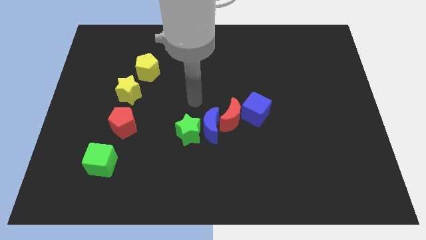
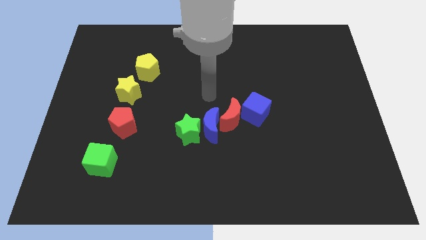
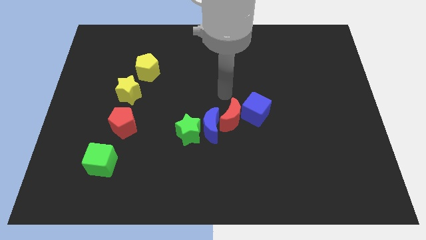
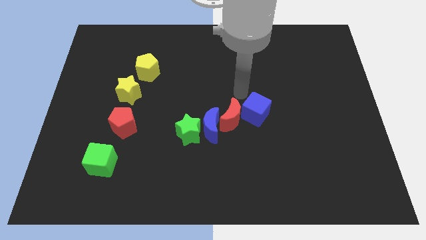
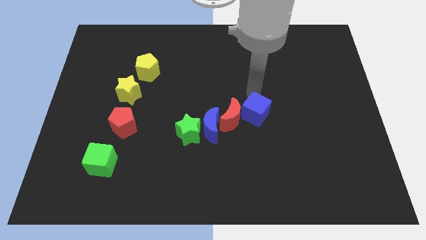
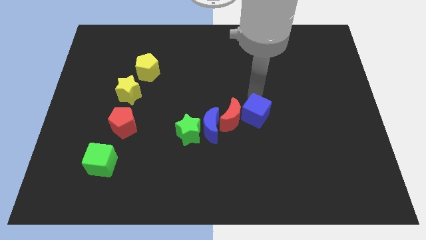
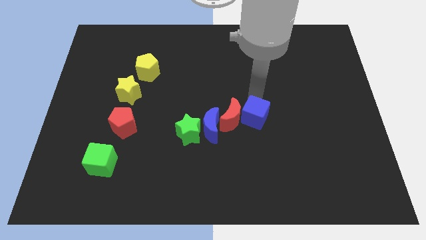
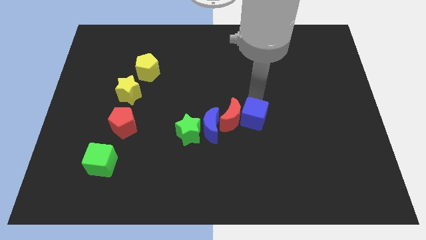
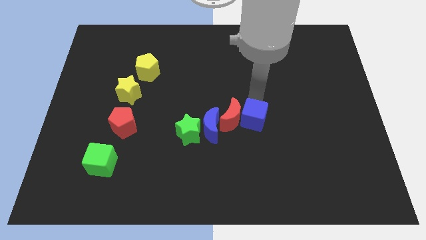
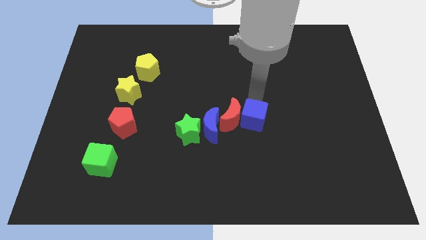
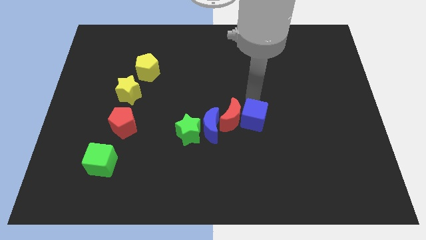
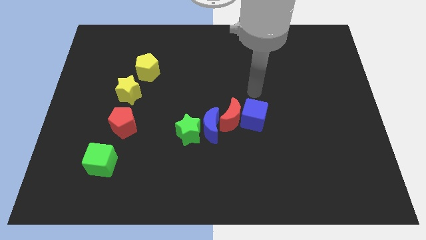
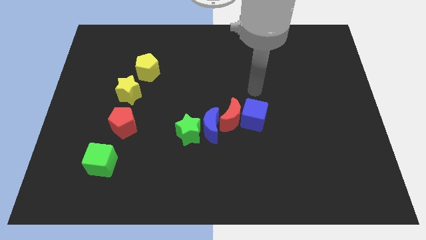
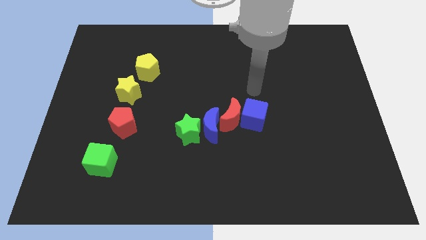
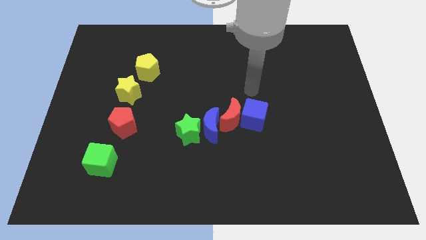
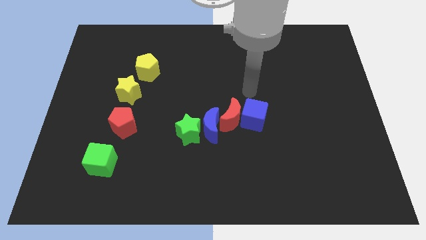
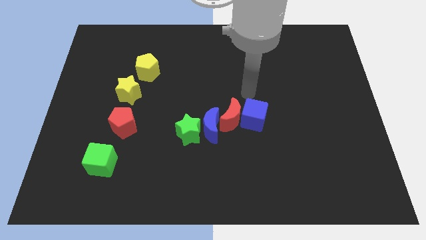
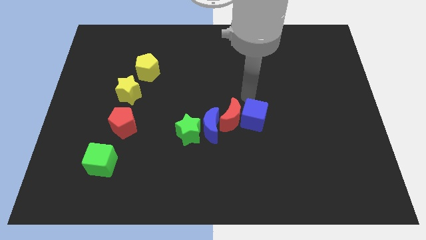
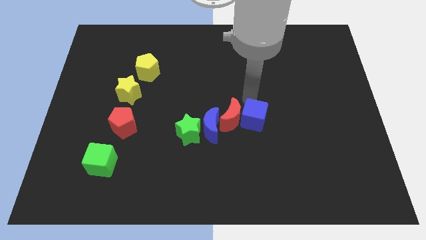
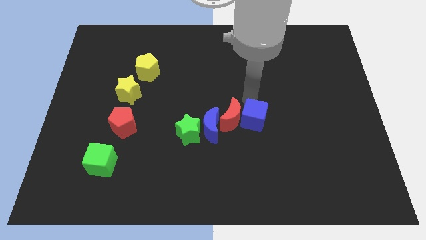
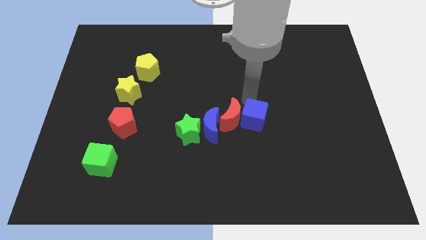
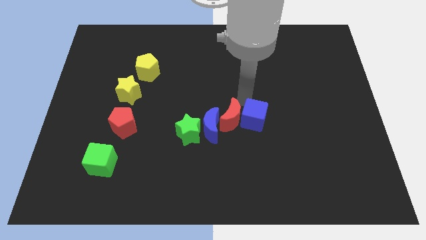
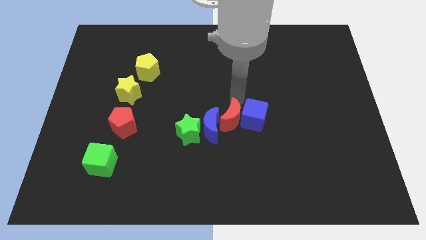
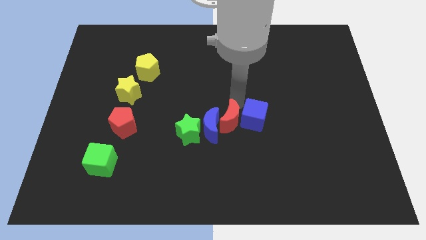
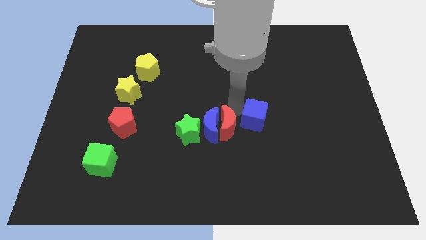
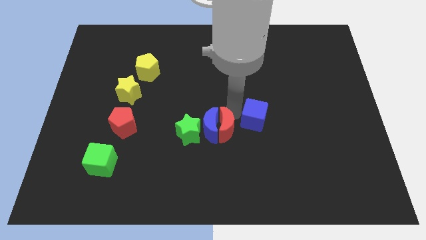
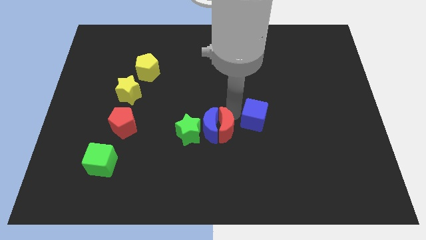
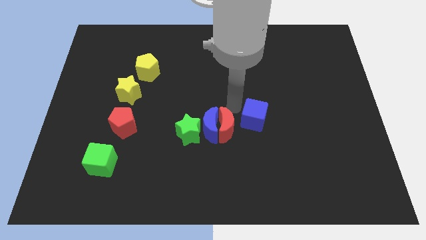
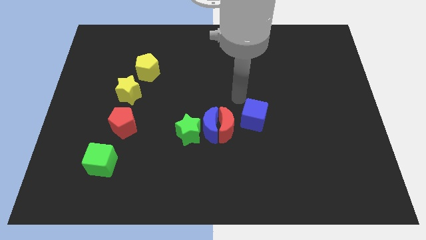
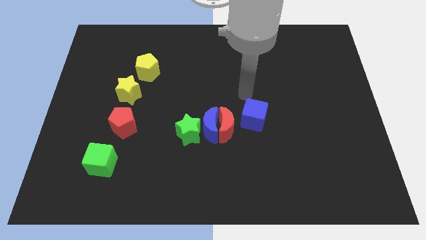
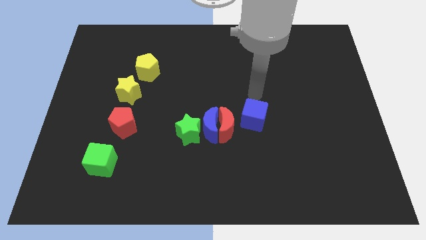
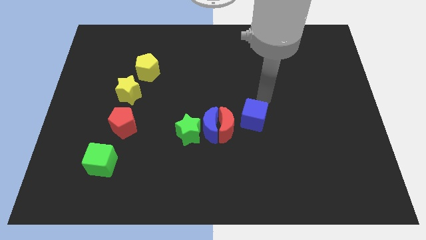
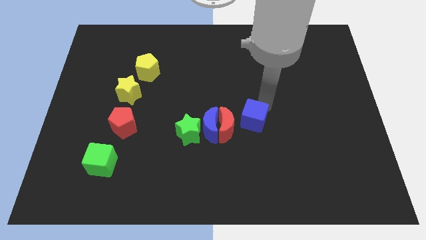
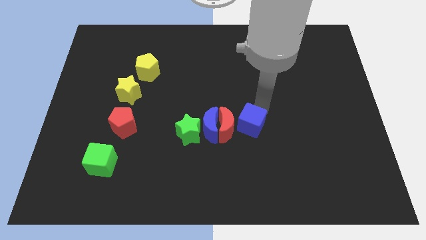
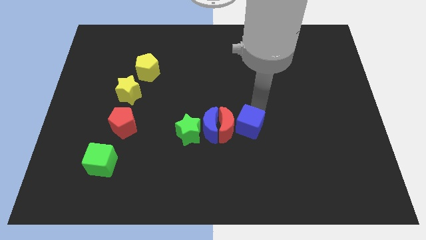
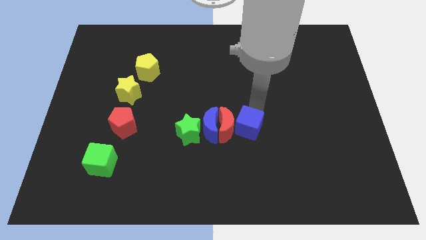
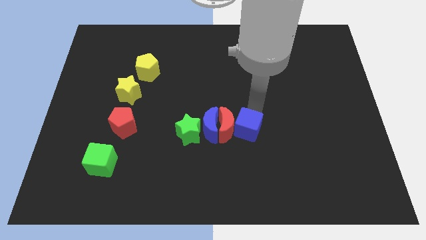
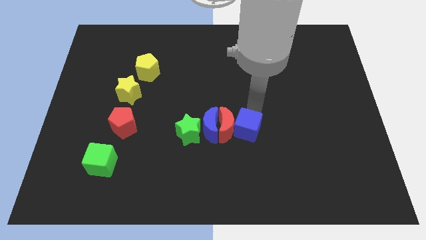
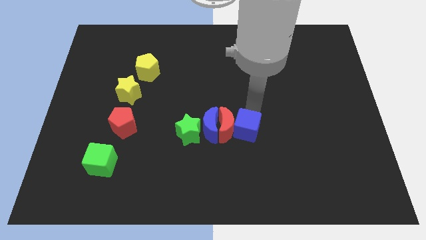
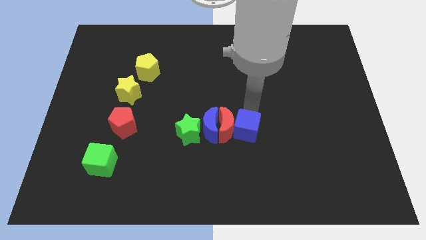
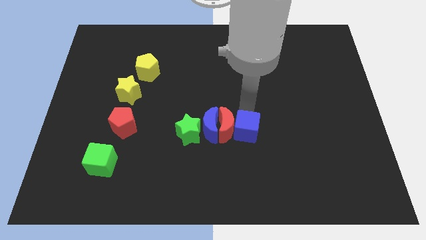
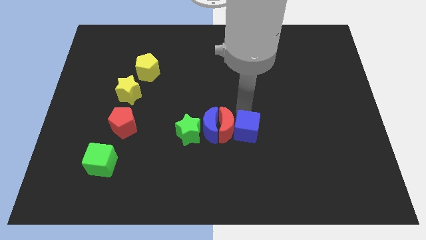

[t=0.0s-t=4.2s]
move the red crescent and blue cube into the right side of the blue moon

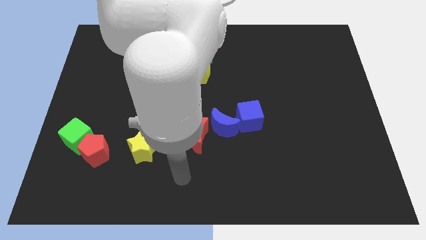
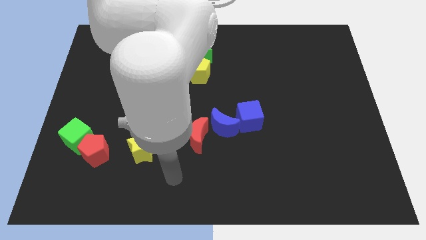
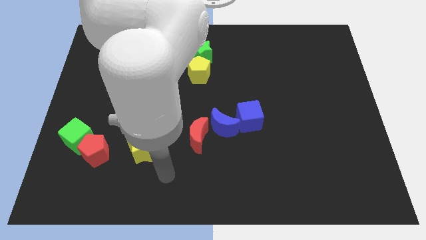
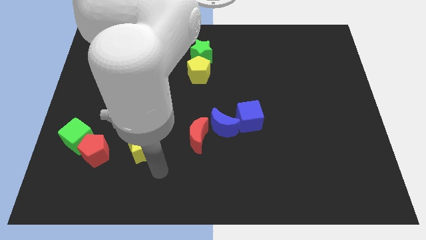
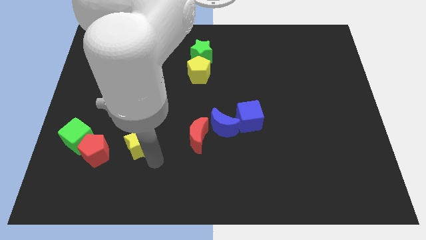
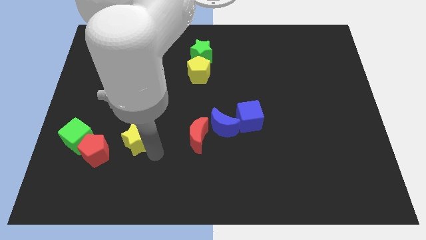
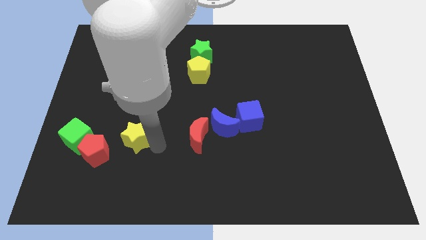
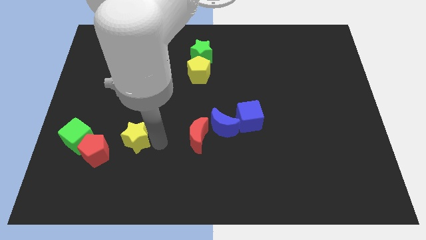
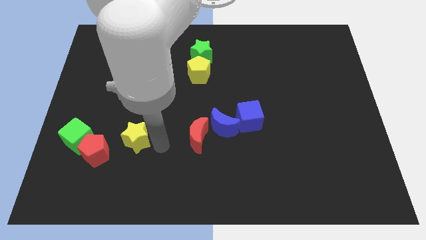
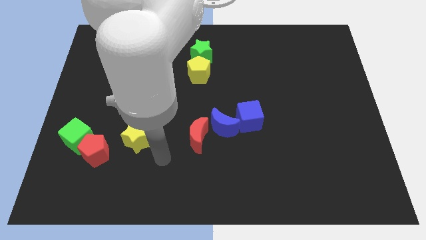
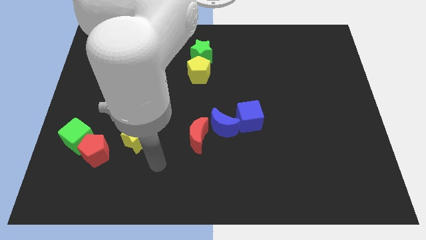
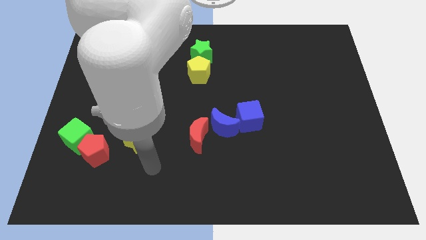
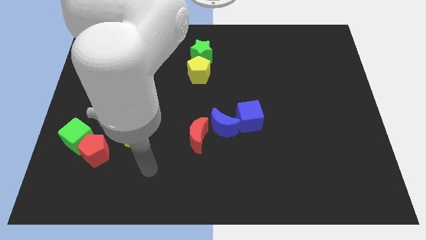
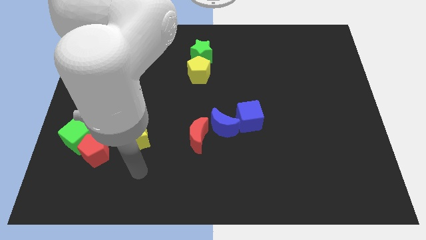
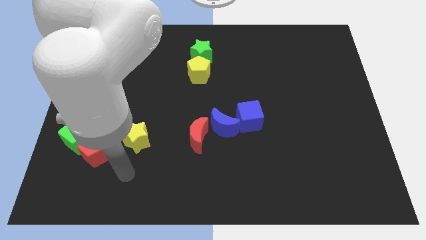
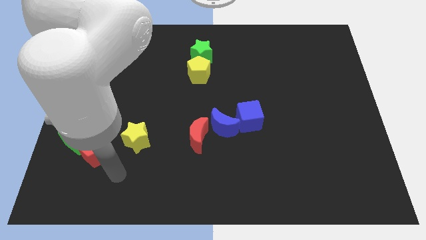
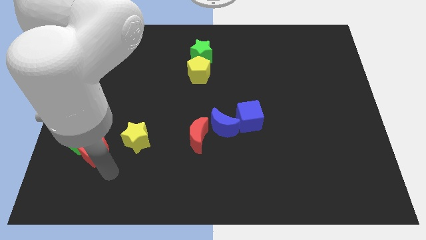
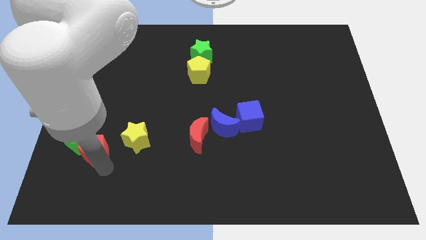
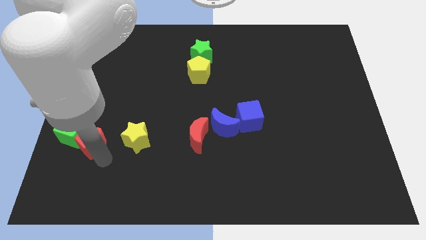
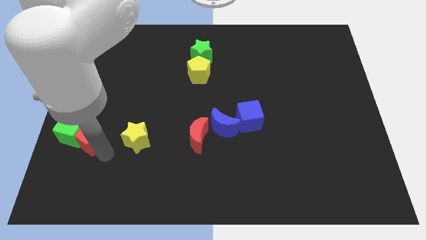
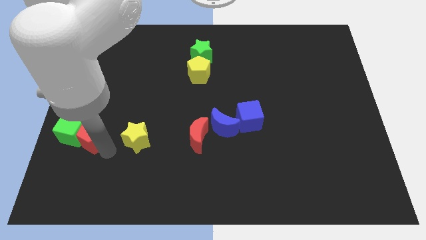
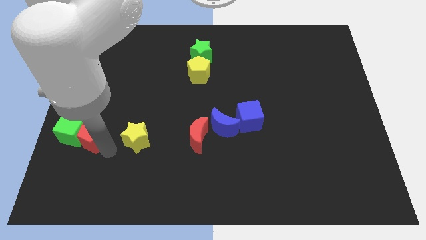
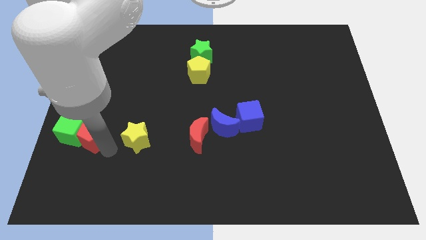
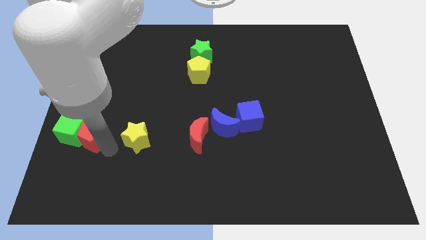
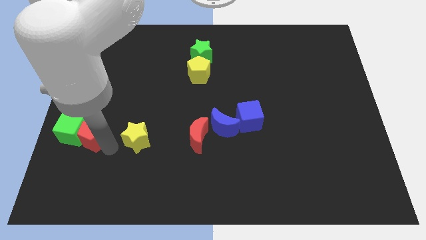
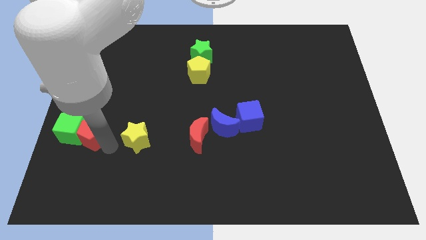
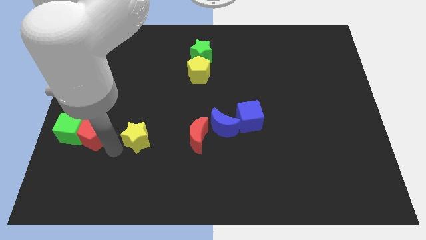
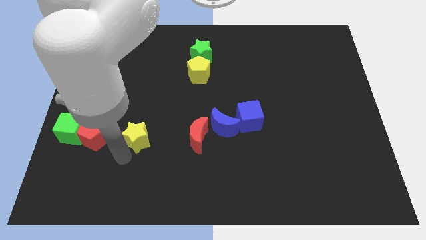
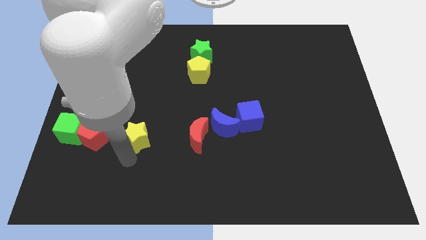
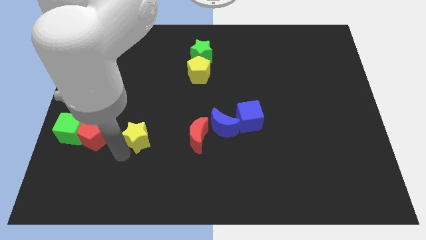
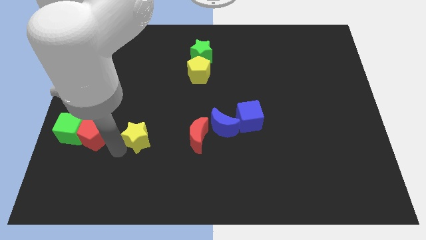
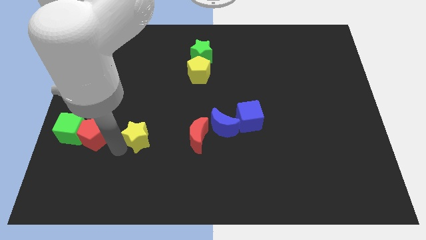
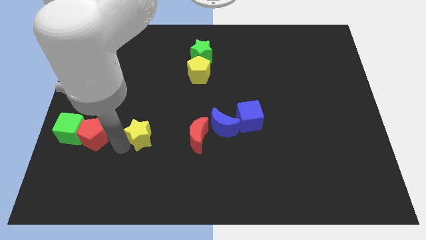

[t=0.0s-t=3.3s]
move the arm at the bottom left of the yellow star

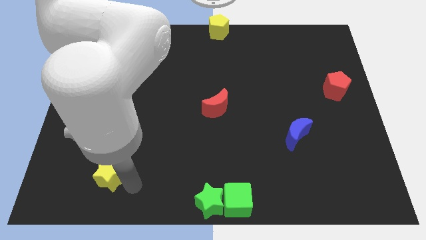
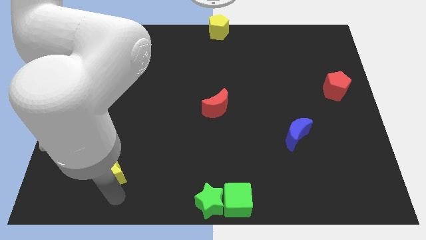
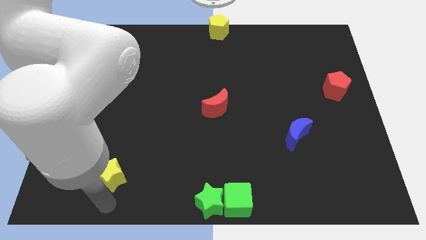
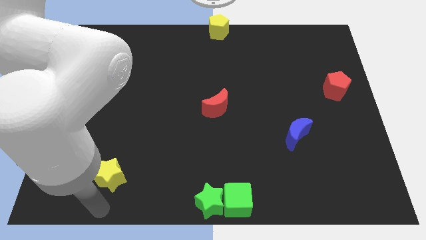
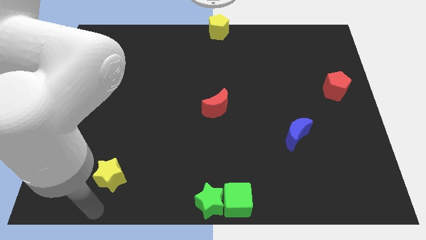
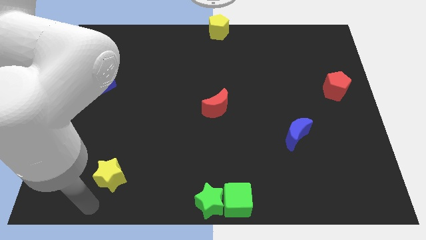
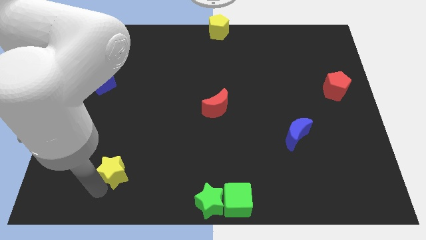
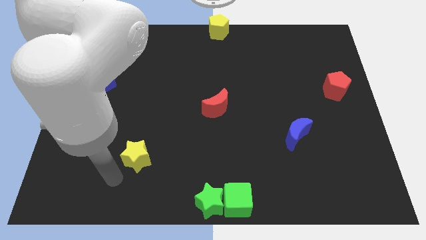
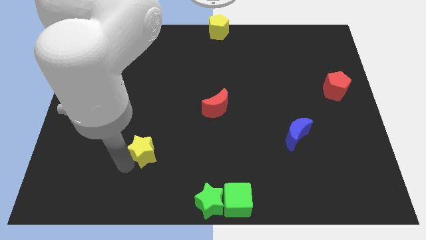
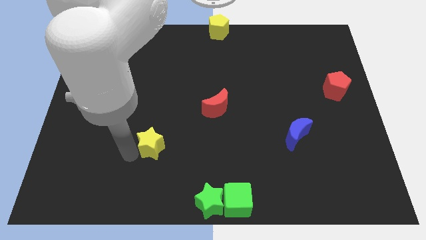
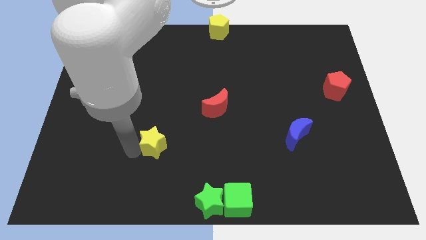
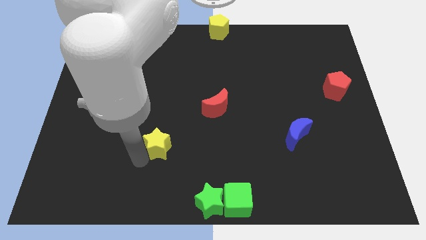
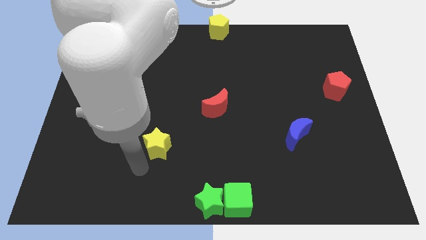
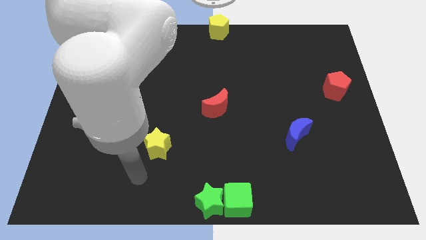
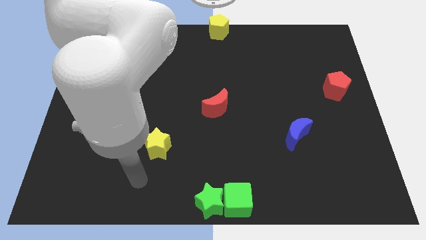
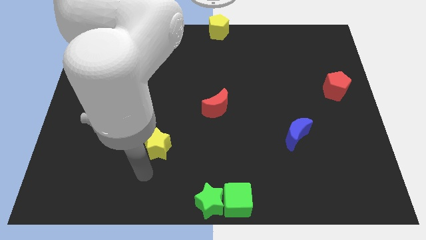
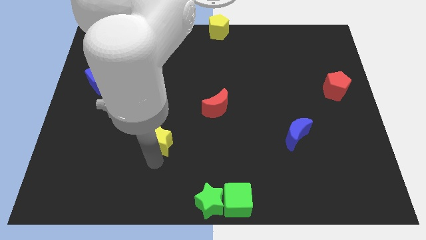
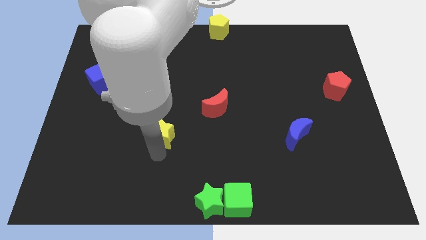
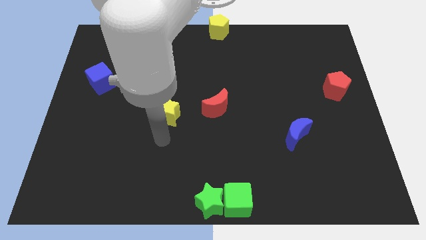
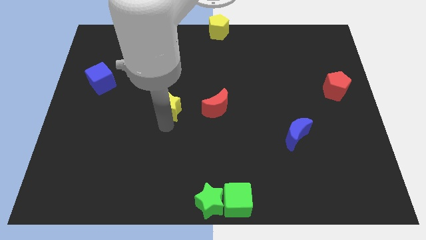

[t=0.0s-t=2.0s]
place the yellow star at the left side of the red moon
